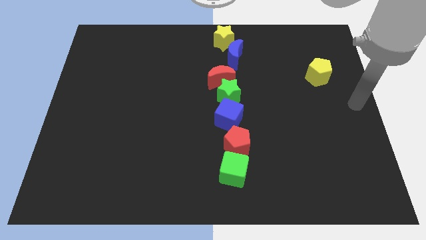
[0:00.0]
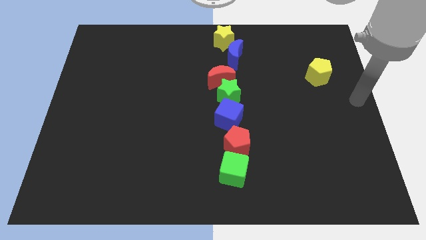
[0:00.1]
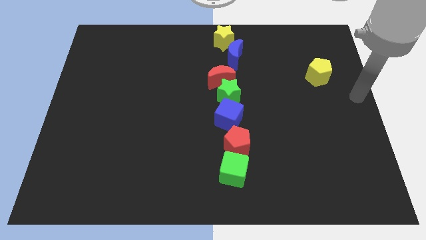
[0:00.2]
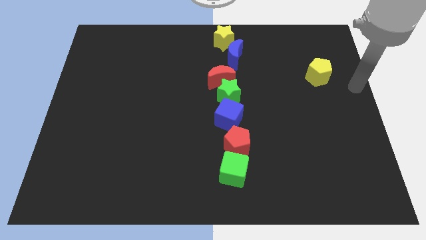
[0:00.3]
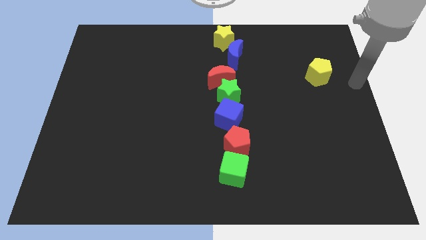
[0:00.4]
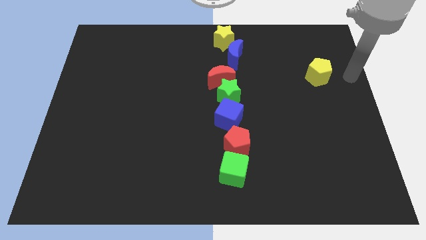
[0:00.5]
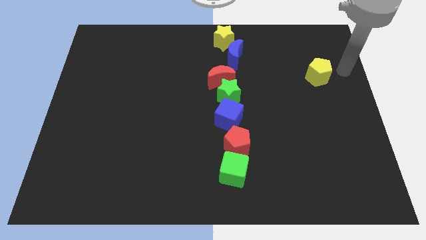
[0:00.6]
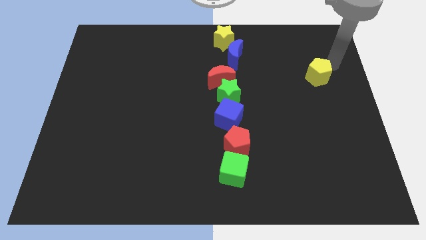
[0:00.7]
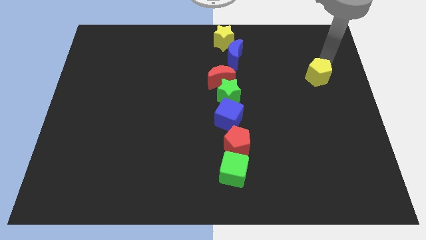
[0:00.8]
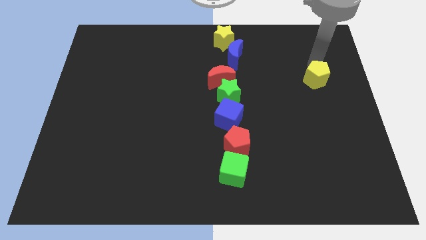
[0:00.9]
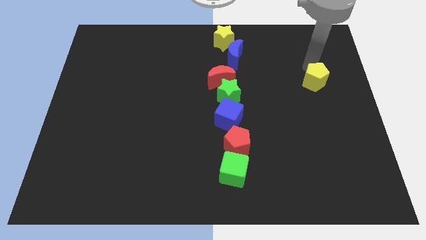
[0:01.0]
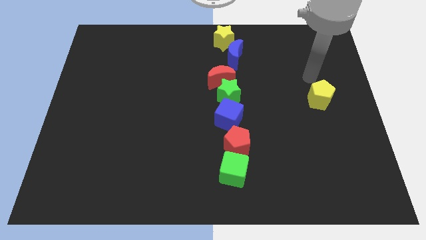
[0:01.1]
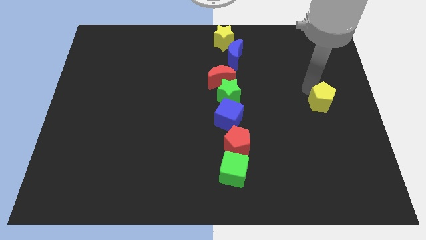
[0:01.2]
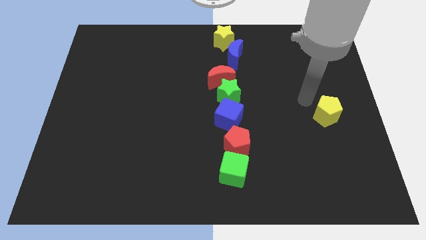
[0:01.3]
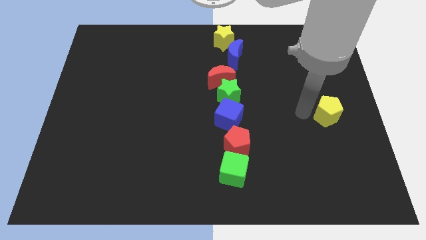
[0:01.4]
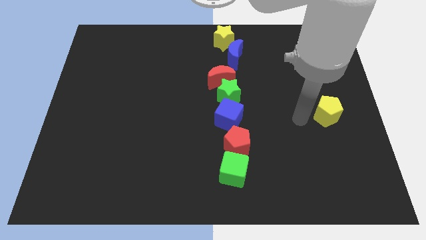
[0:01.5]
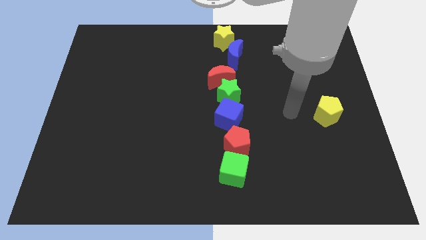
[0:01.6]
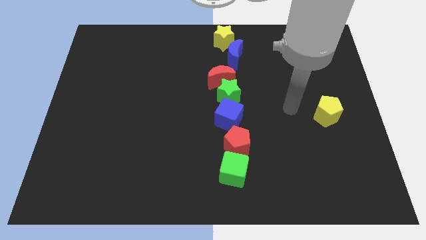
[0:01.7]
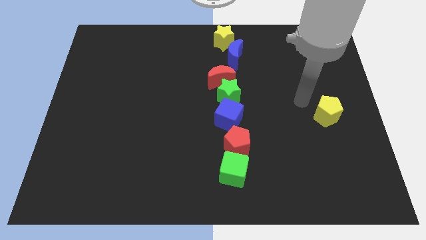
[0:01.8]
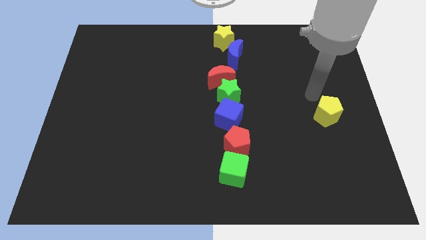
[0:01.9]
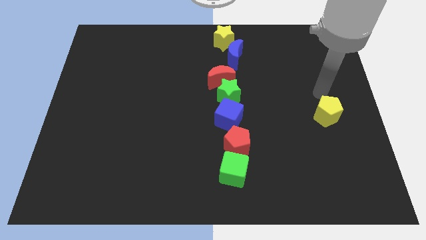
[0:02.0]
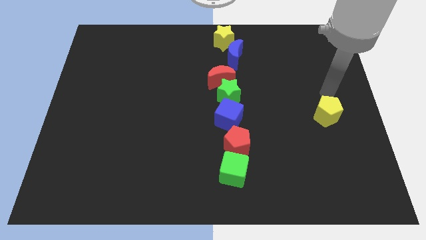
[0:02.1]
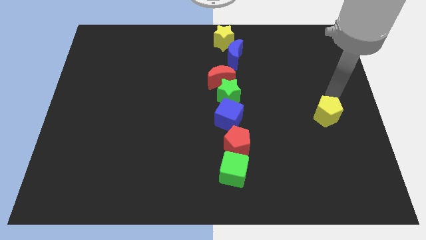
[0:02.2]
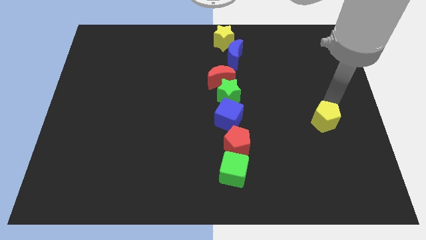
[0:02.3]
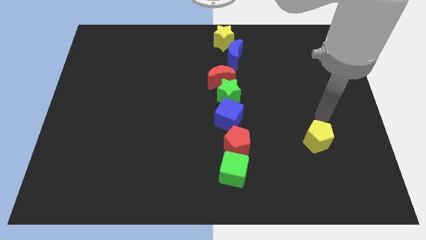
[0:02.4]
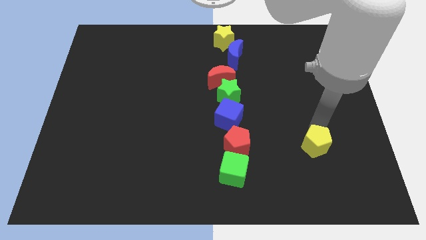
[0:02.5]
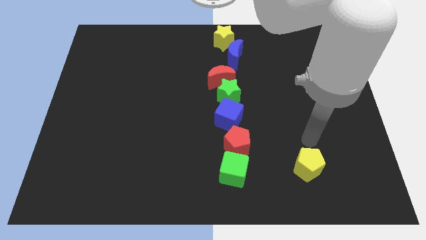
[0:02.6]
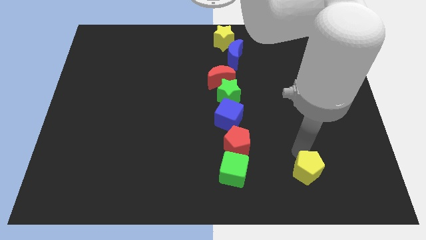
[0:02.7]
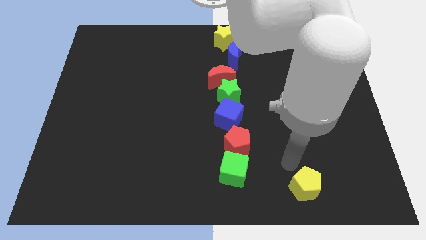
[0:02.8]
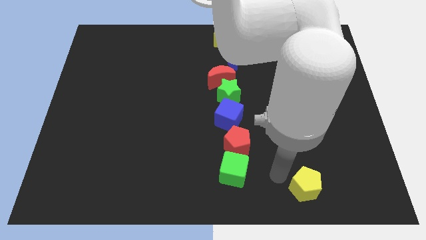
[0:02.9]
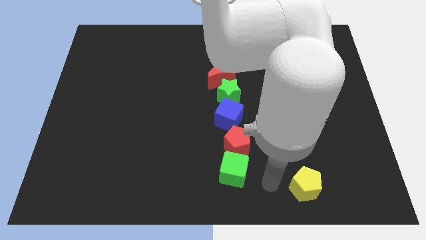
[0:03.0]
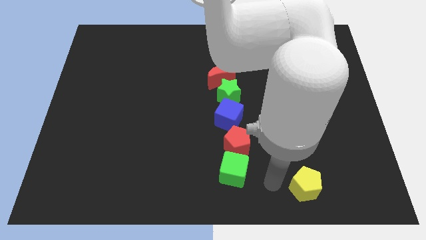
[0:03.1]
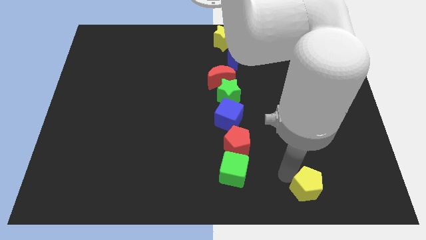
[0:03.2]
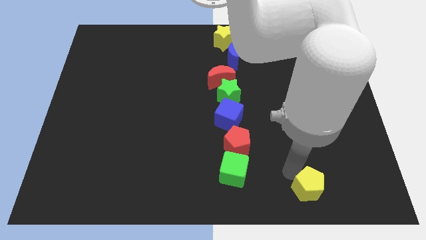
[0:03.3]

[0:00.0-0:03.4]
move the yellow pentagon to the bottom of the board

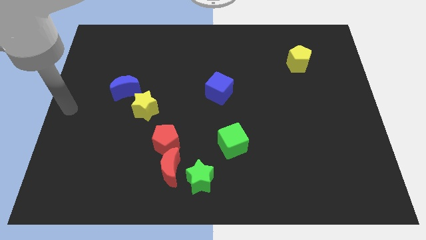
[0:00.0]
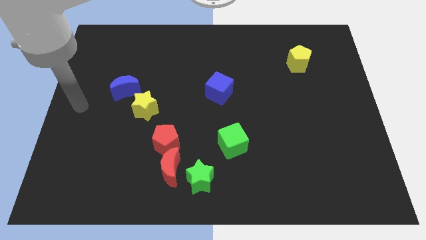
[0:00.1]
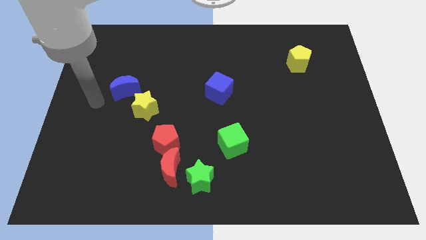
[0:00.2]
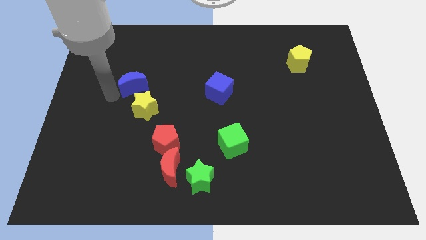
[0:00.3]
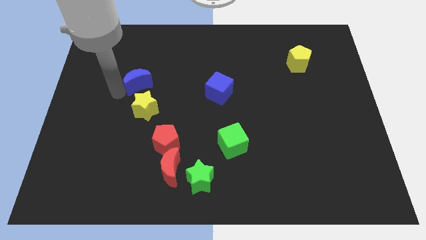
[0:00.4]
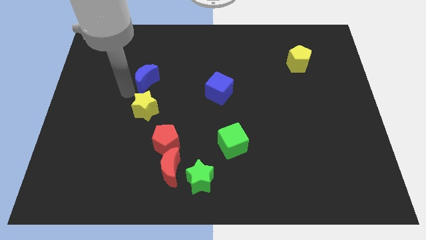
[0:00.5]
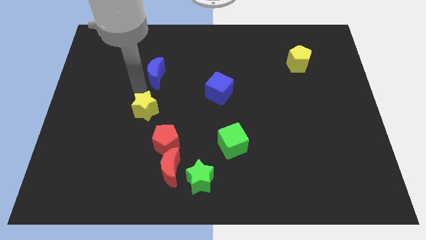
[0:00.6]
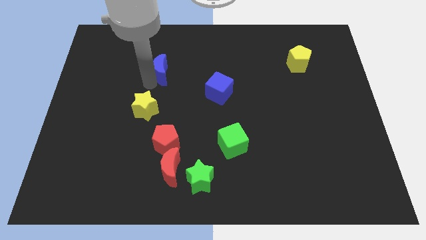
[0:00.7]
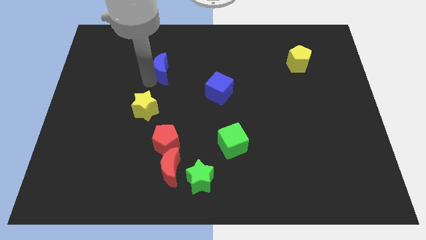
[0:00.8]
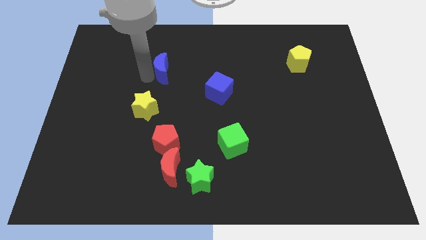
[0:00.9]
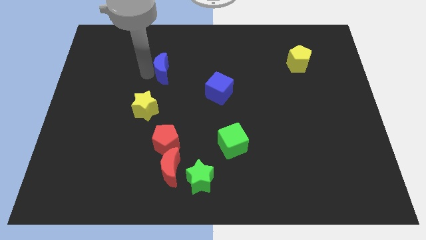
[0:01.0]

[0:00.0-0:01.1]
separate blue moon from yellow star

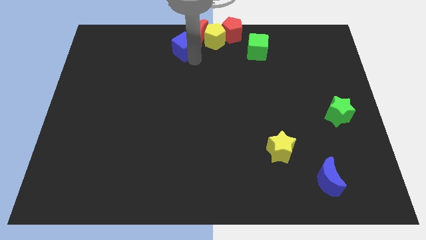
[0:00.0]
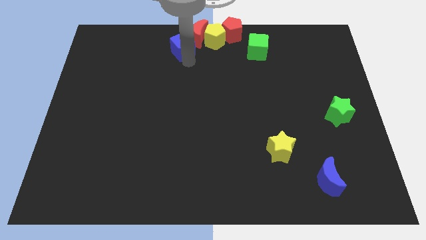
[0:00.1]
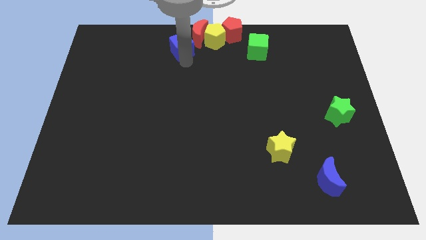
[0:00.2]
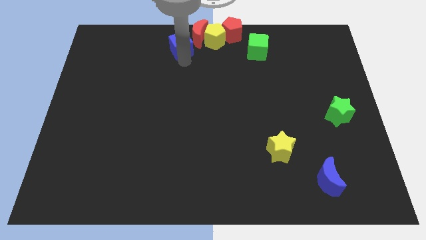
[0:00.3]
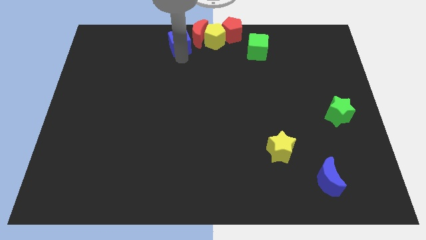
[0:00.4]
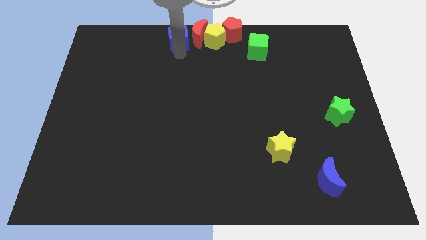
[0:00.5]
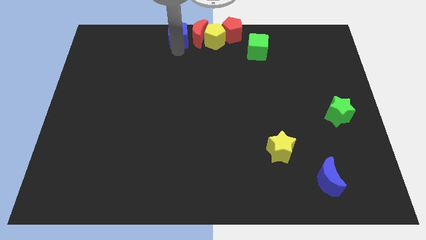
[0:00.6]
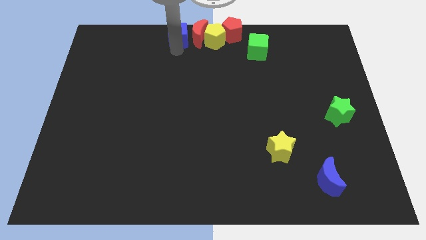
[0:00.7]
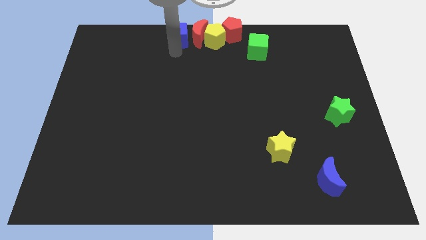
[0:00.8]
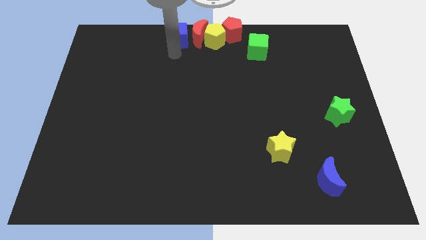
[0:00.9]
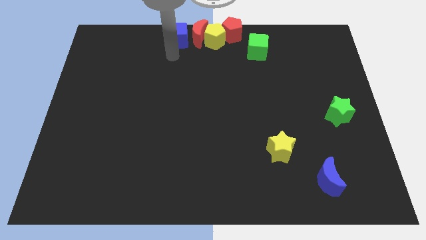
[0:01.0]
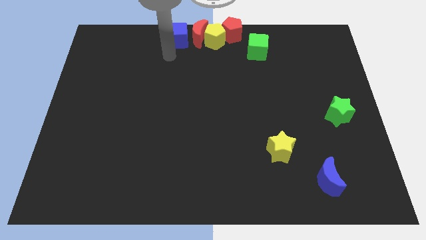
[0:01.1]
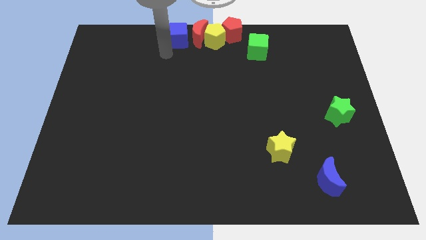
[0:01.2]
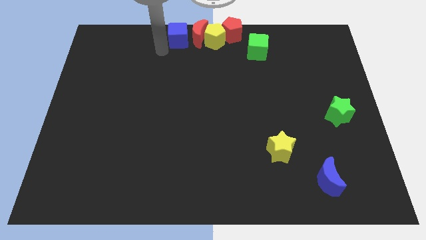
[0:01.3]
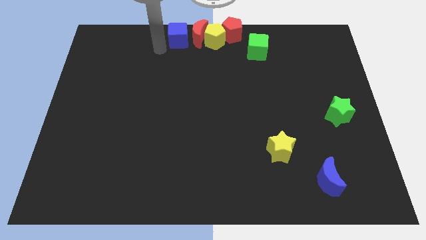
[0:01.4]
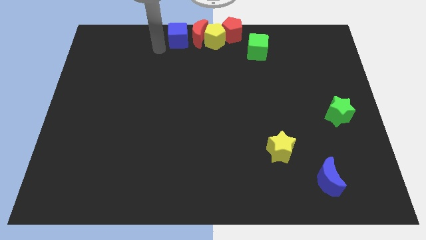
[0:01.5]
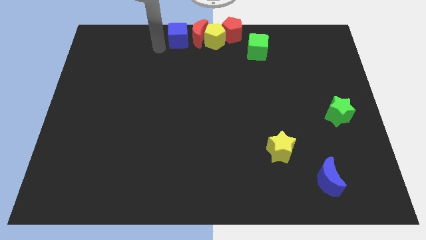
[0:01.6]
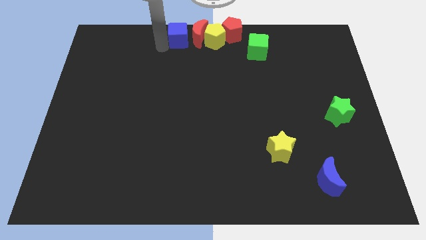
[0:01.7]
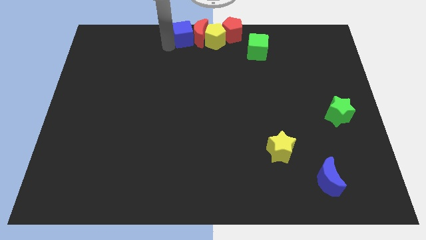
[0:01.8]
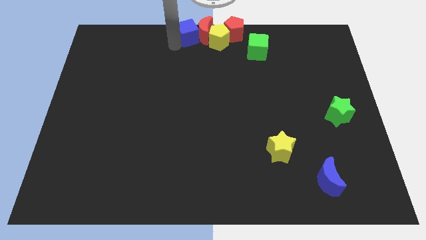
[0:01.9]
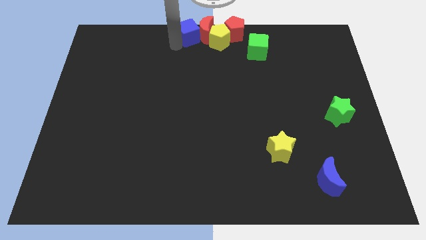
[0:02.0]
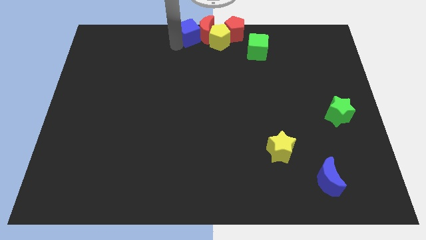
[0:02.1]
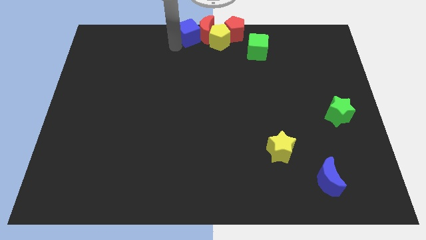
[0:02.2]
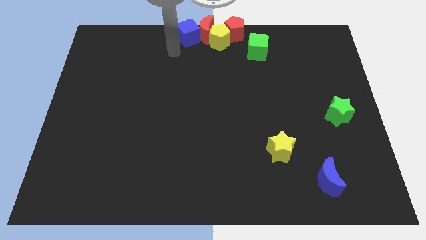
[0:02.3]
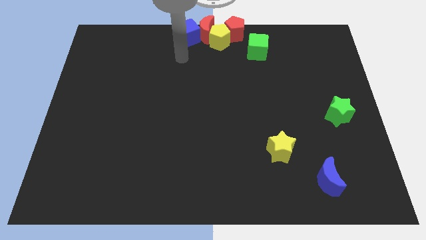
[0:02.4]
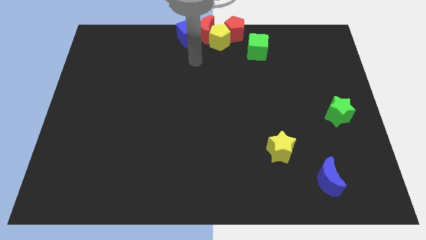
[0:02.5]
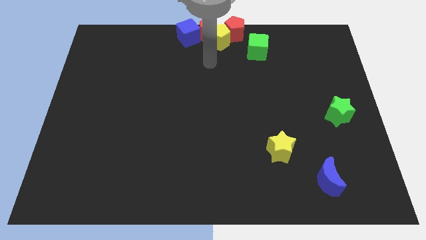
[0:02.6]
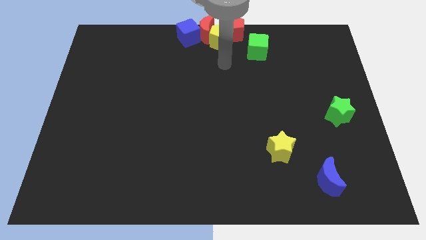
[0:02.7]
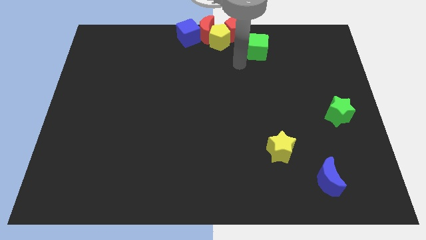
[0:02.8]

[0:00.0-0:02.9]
push the blue cube into the red crescent from left side

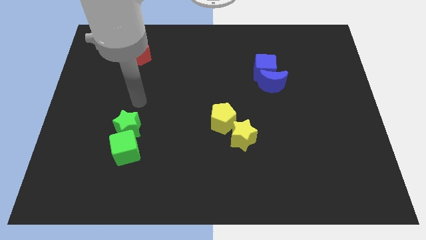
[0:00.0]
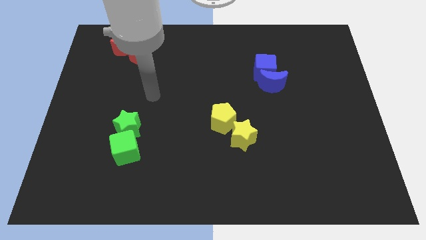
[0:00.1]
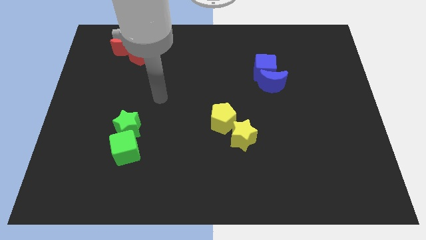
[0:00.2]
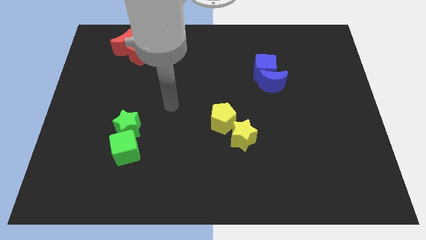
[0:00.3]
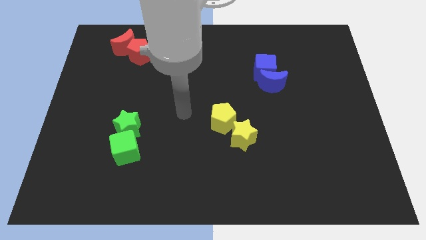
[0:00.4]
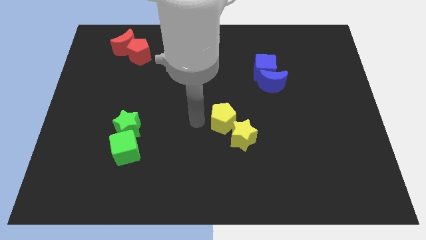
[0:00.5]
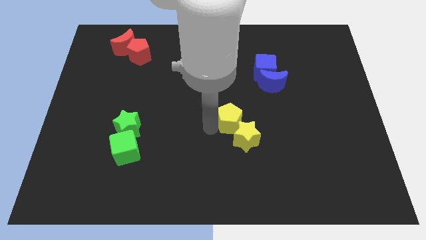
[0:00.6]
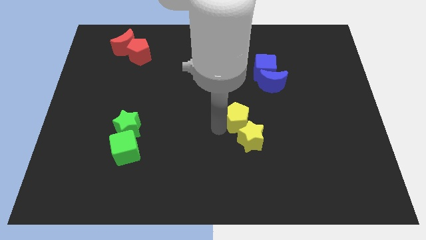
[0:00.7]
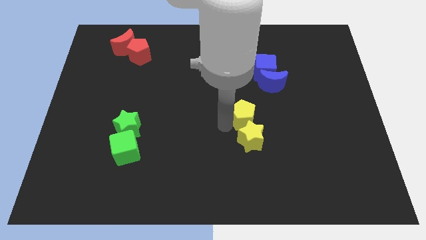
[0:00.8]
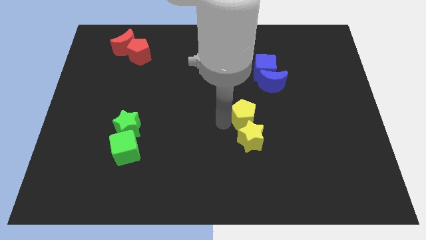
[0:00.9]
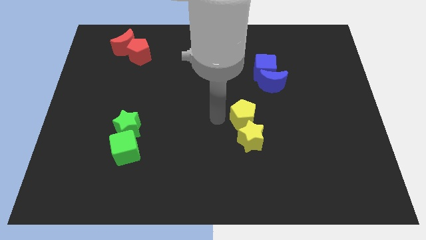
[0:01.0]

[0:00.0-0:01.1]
slightly move the yellow pentagon to the right of the board

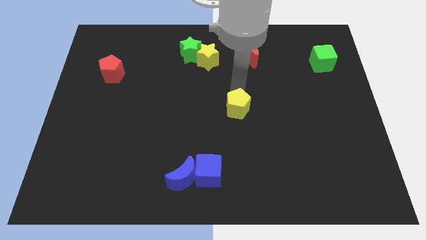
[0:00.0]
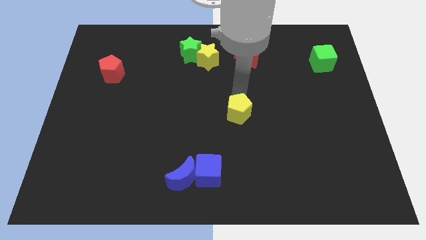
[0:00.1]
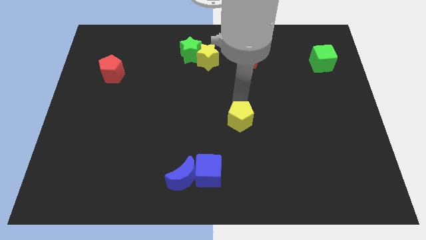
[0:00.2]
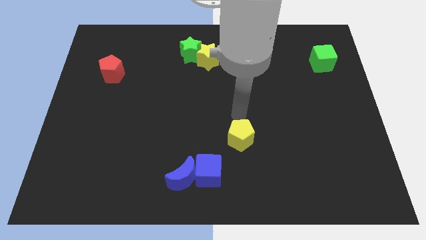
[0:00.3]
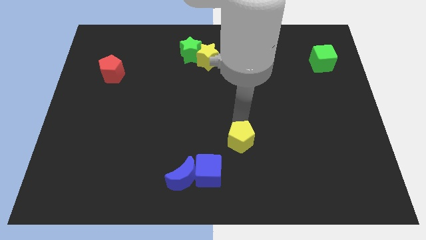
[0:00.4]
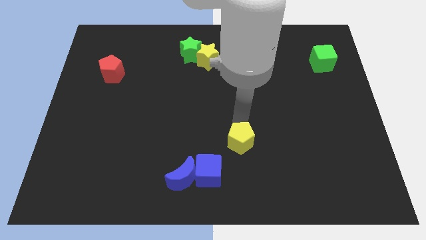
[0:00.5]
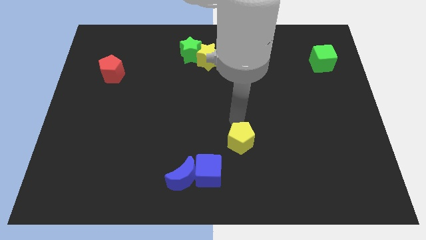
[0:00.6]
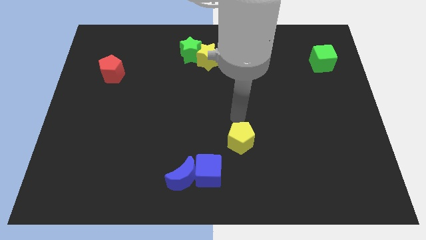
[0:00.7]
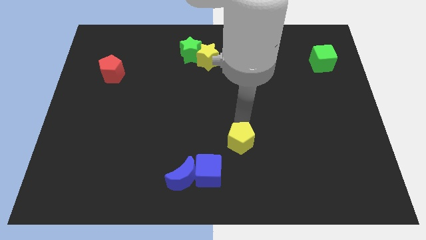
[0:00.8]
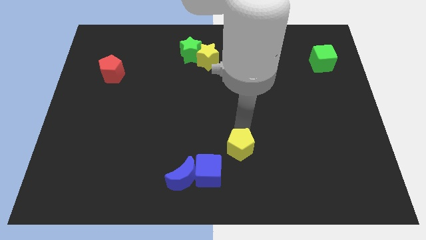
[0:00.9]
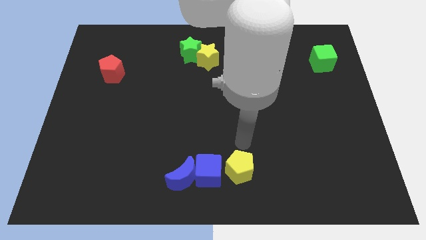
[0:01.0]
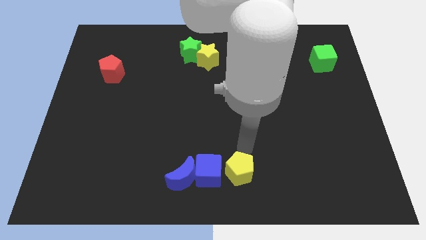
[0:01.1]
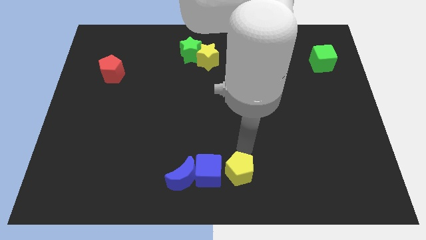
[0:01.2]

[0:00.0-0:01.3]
place the yellow pentagon parallel to blue cube
